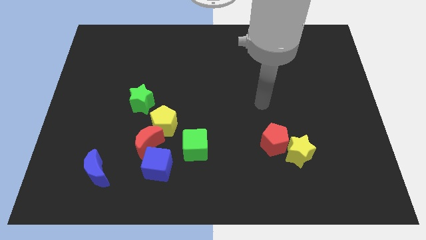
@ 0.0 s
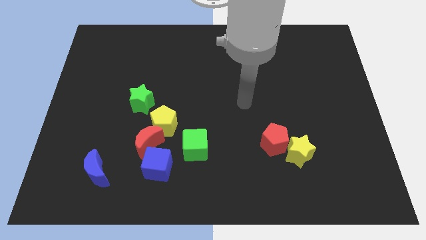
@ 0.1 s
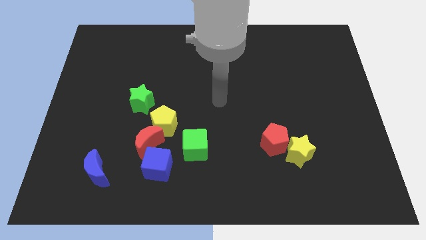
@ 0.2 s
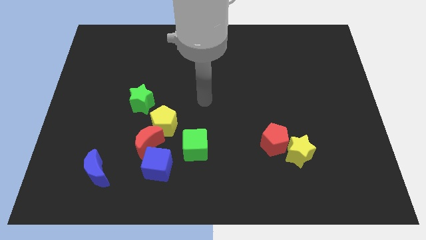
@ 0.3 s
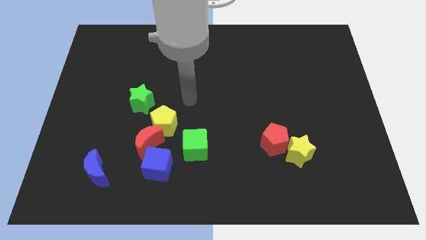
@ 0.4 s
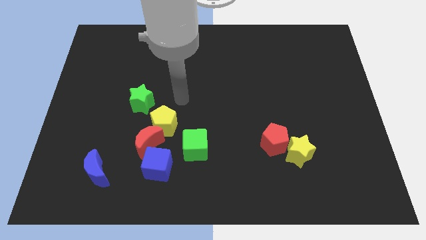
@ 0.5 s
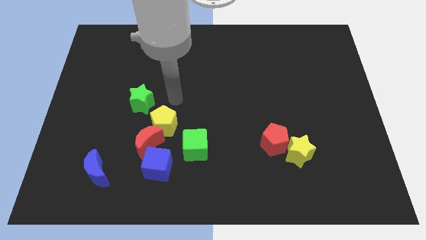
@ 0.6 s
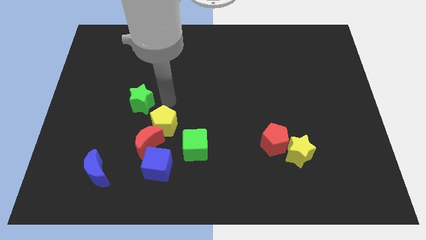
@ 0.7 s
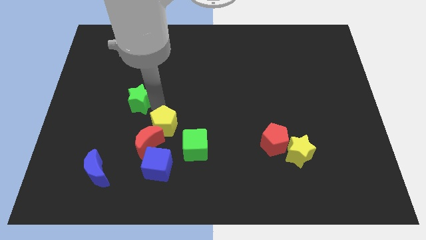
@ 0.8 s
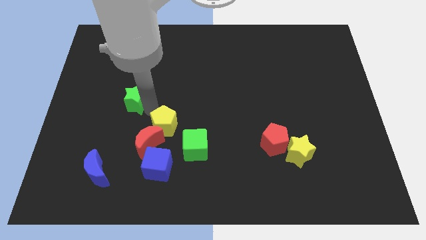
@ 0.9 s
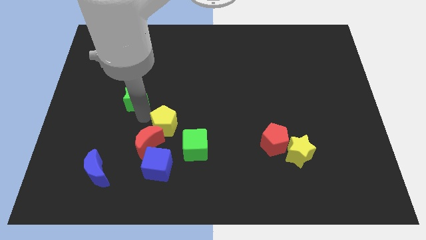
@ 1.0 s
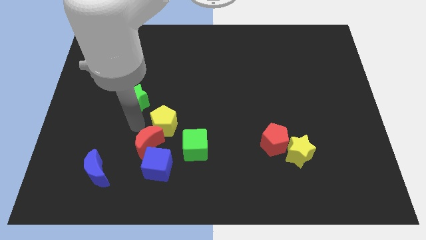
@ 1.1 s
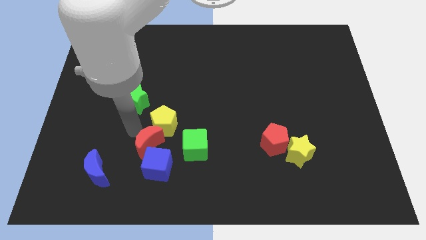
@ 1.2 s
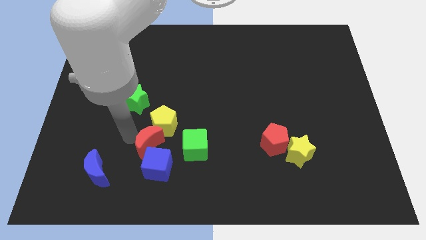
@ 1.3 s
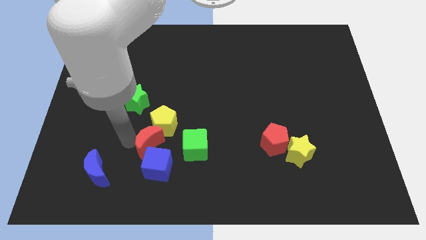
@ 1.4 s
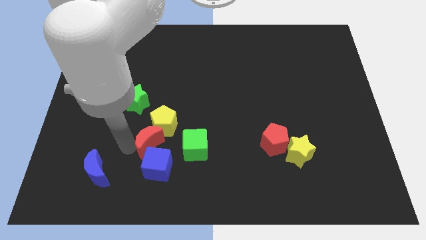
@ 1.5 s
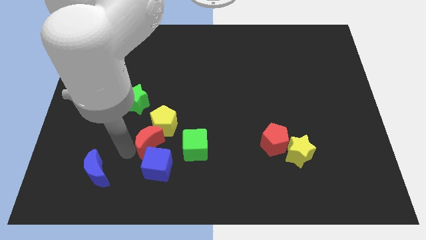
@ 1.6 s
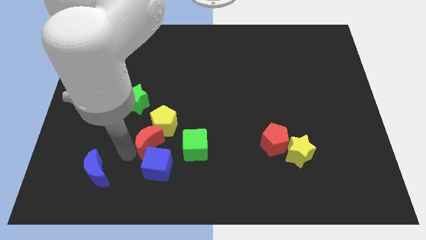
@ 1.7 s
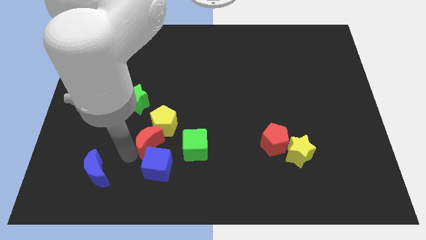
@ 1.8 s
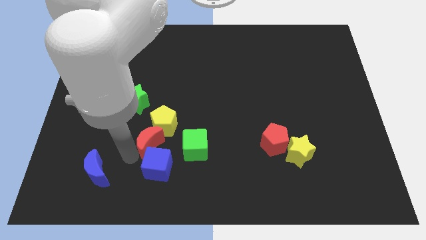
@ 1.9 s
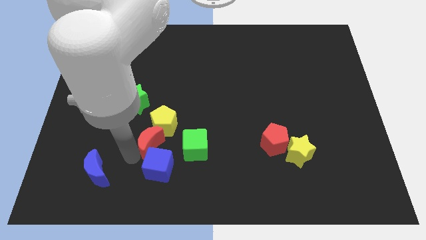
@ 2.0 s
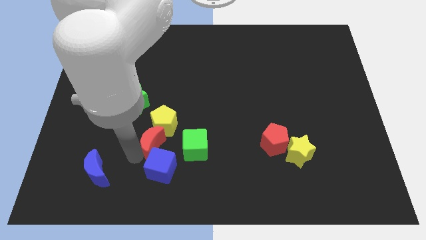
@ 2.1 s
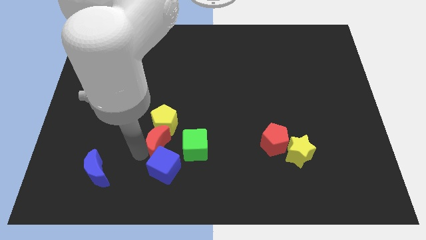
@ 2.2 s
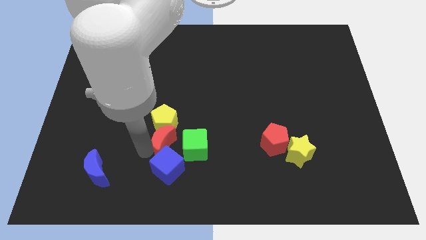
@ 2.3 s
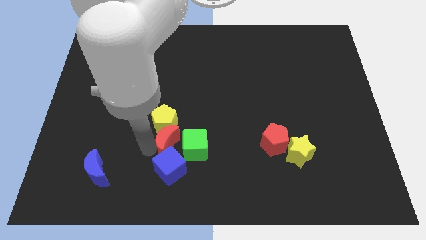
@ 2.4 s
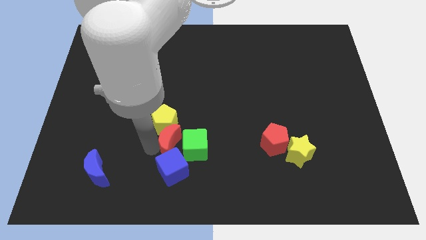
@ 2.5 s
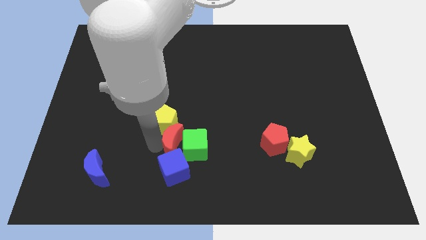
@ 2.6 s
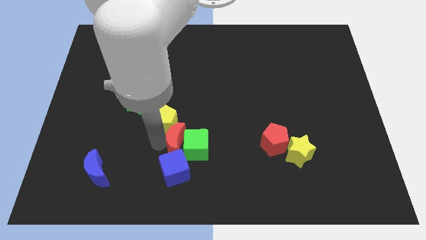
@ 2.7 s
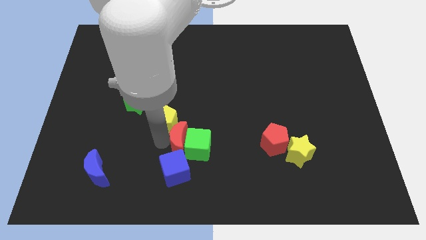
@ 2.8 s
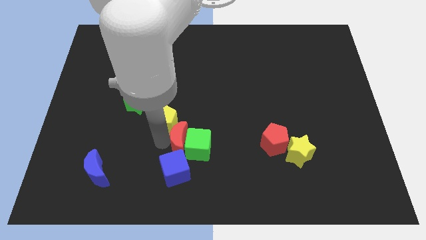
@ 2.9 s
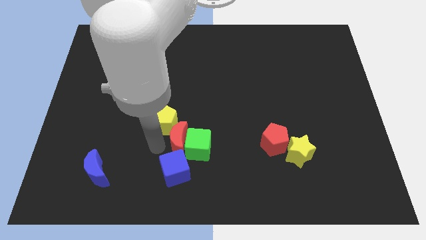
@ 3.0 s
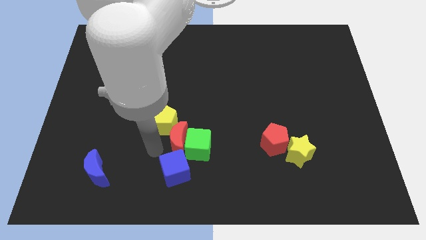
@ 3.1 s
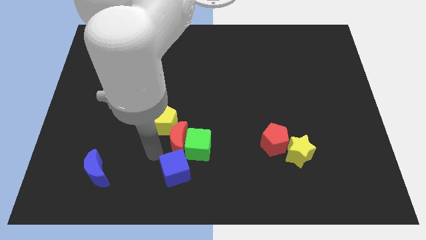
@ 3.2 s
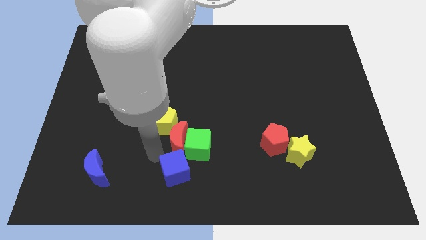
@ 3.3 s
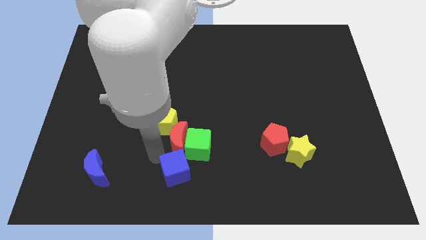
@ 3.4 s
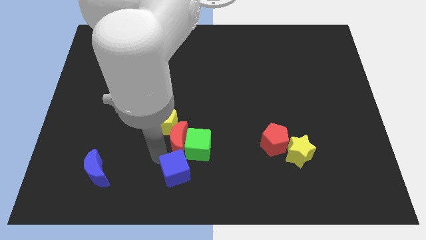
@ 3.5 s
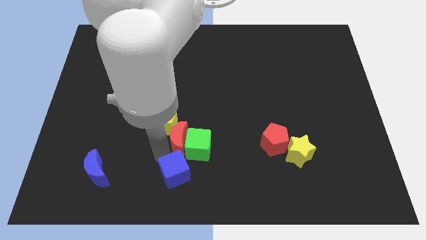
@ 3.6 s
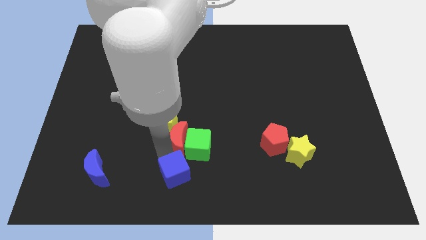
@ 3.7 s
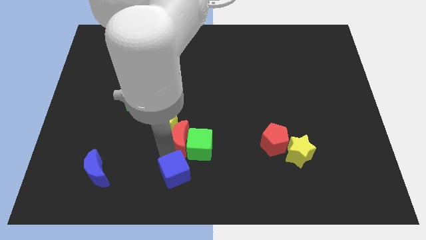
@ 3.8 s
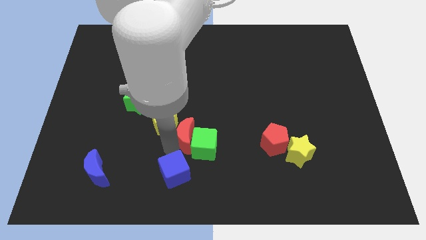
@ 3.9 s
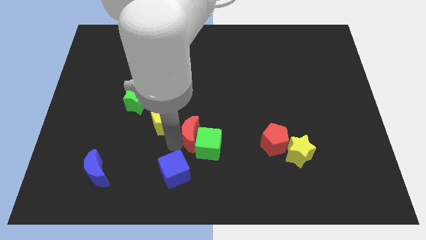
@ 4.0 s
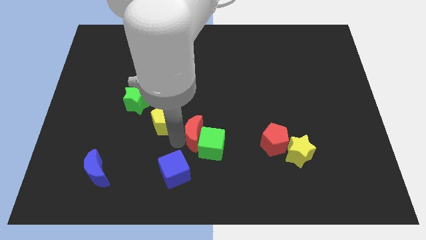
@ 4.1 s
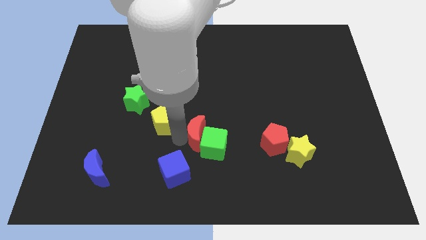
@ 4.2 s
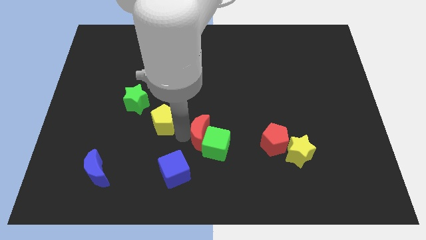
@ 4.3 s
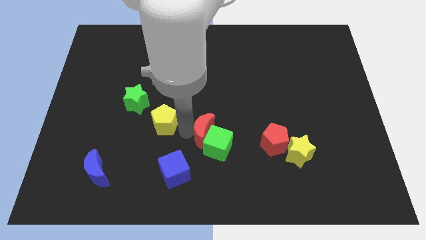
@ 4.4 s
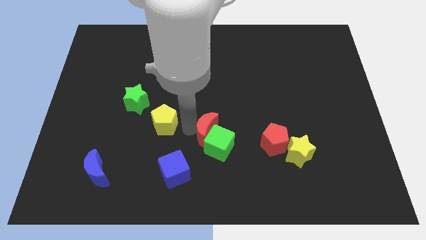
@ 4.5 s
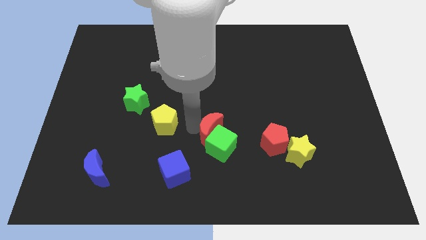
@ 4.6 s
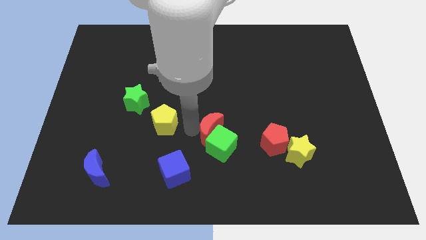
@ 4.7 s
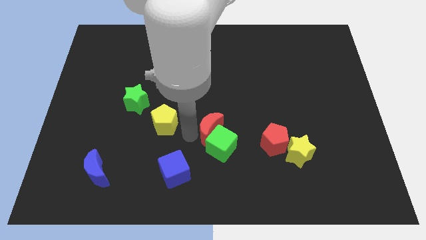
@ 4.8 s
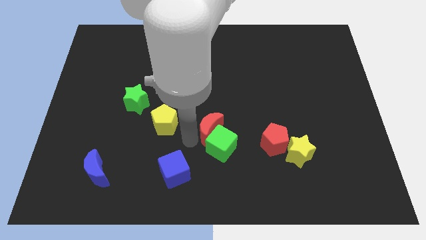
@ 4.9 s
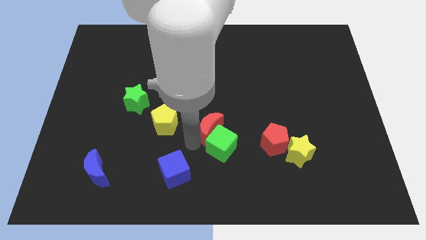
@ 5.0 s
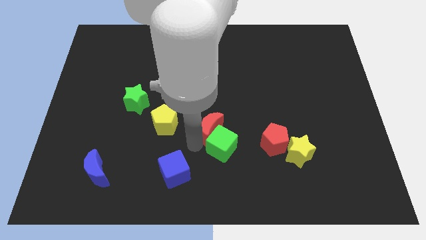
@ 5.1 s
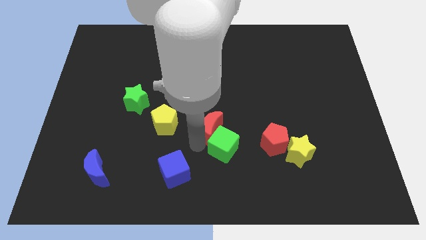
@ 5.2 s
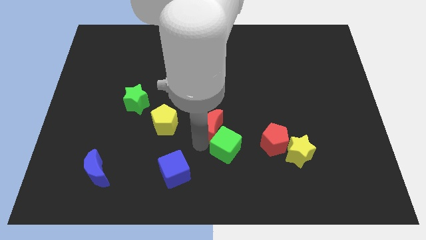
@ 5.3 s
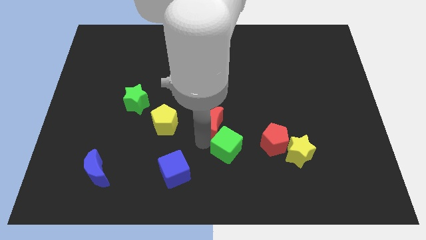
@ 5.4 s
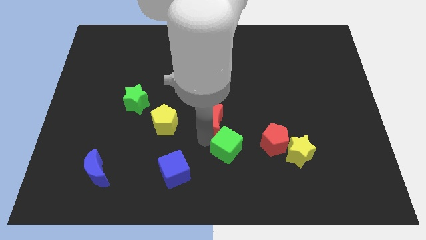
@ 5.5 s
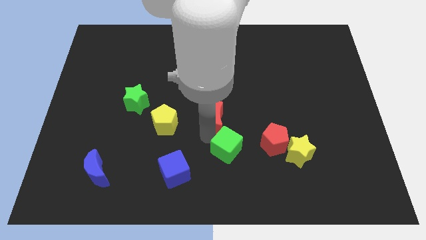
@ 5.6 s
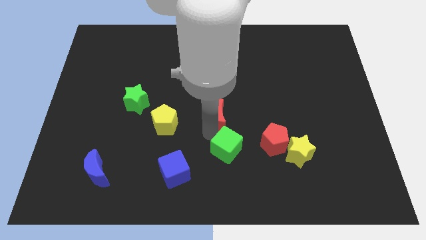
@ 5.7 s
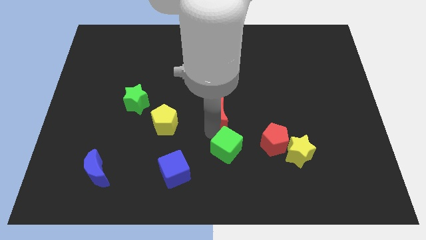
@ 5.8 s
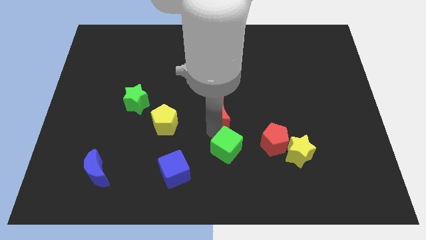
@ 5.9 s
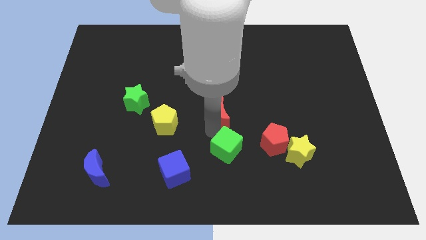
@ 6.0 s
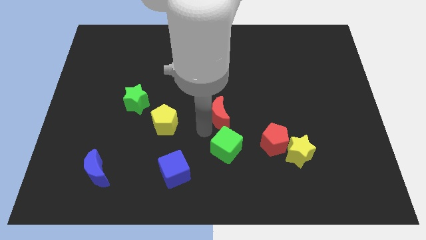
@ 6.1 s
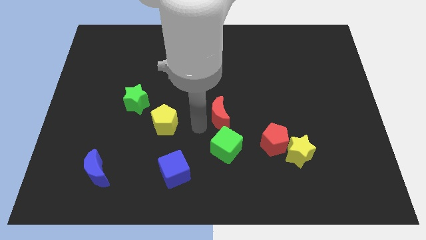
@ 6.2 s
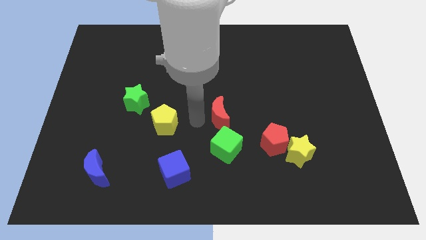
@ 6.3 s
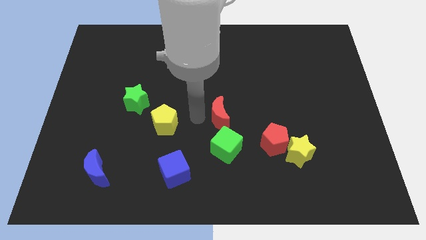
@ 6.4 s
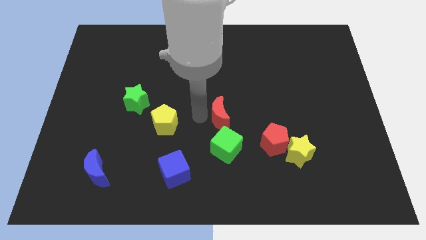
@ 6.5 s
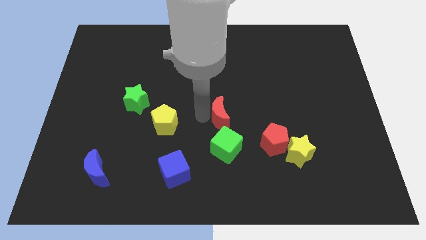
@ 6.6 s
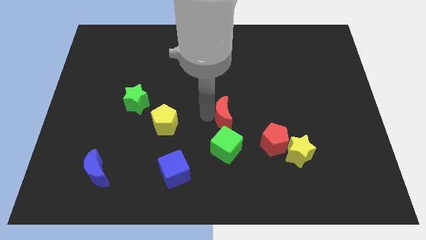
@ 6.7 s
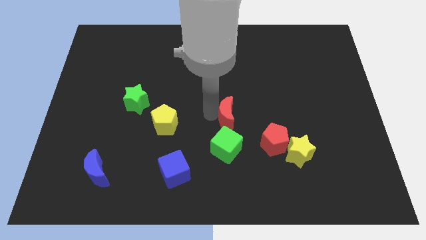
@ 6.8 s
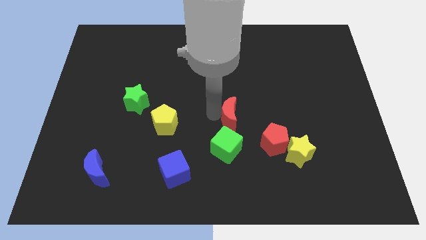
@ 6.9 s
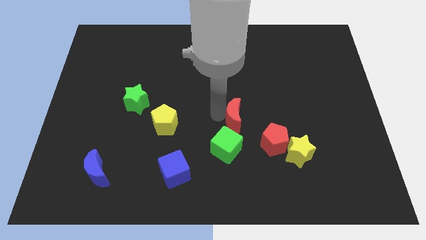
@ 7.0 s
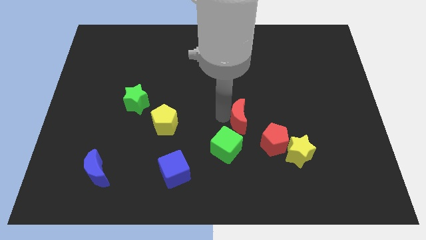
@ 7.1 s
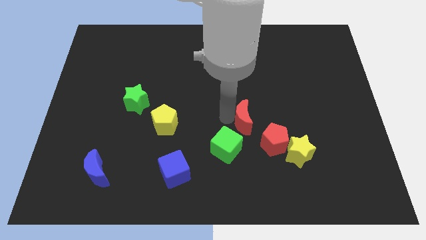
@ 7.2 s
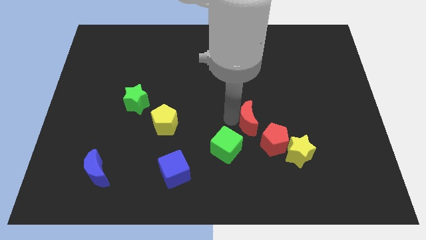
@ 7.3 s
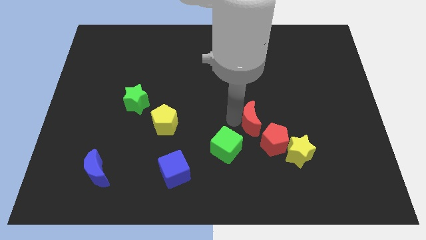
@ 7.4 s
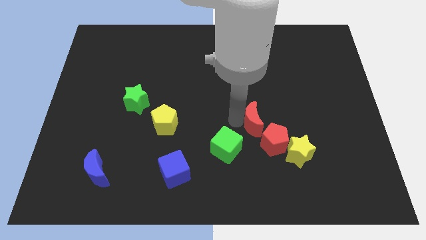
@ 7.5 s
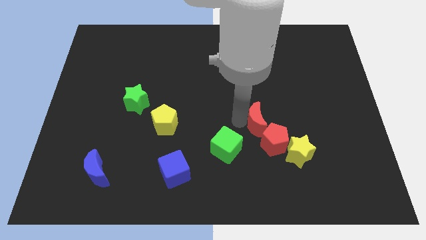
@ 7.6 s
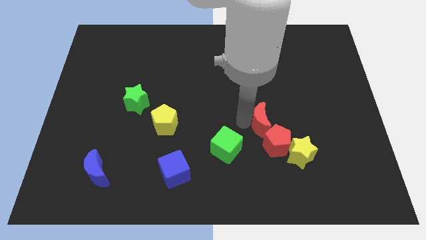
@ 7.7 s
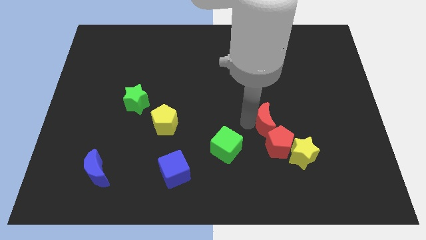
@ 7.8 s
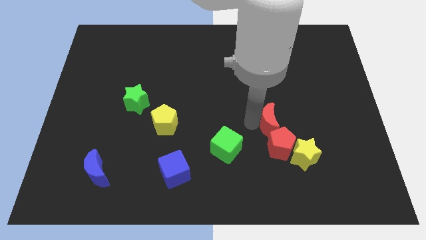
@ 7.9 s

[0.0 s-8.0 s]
move the red moon to the red pentagon

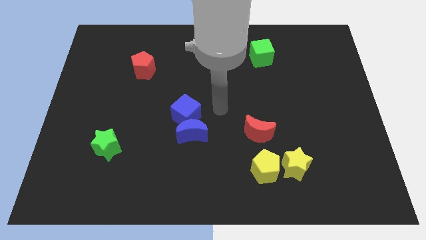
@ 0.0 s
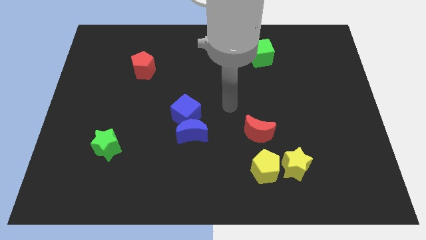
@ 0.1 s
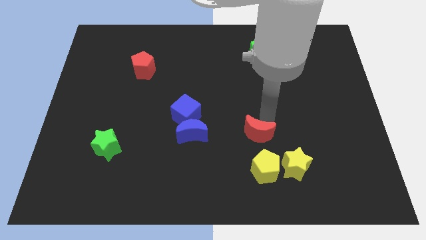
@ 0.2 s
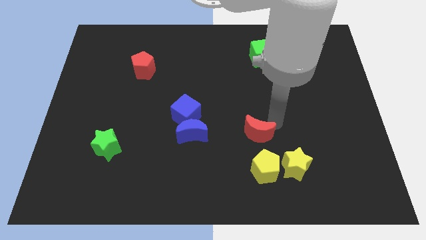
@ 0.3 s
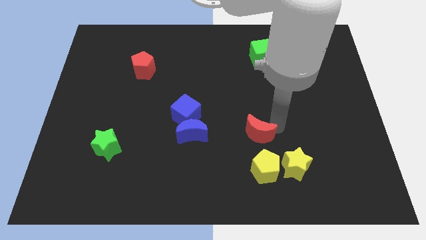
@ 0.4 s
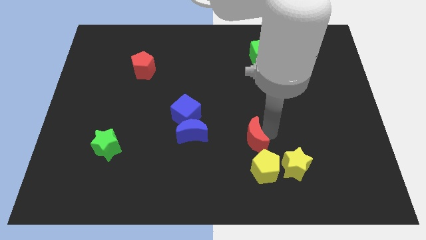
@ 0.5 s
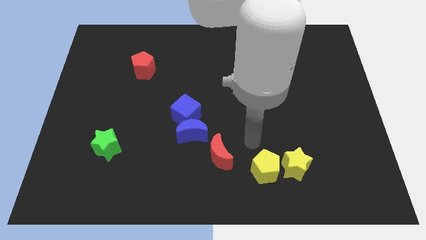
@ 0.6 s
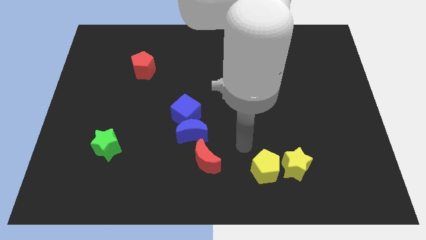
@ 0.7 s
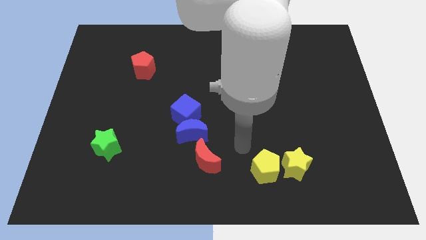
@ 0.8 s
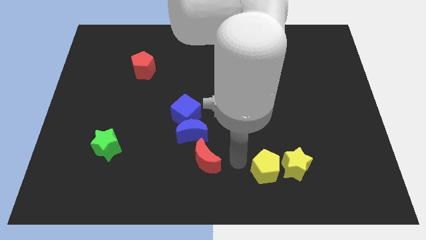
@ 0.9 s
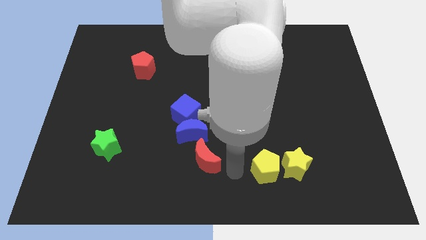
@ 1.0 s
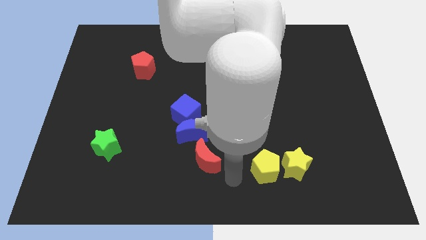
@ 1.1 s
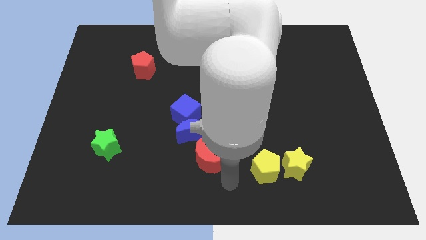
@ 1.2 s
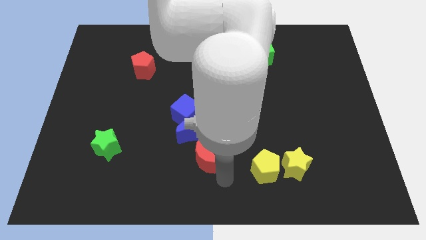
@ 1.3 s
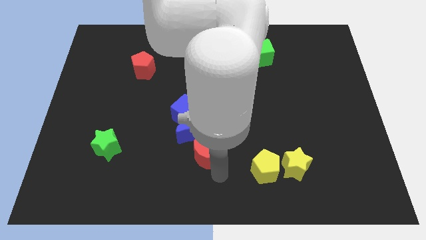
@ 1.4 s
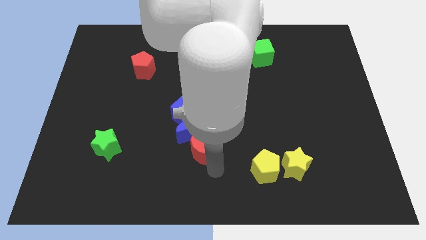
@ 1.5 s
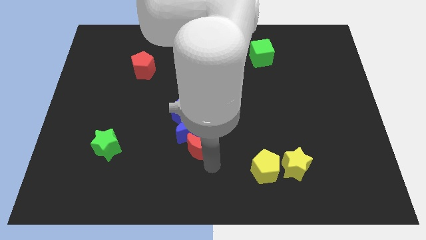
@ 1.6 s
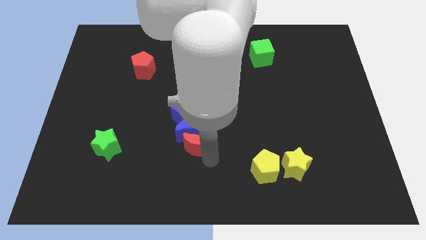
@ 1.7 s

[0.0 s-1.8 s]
move the red moon close to the blue moon
